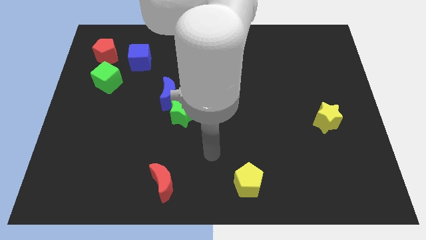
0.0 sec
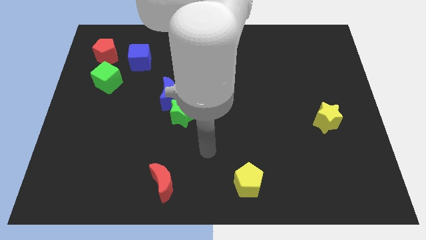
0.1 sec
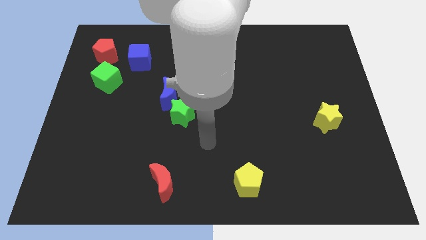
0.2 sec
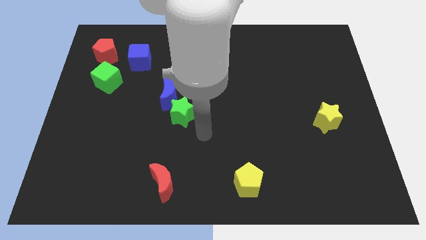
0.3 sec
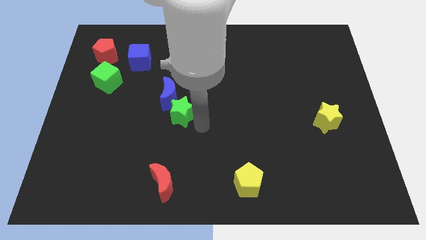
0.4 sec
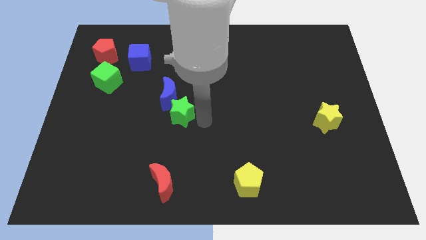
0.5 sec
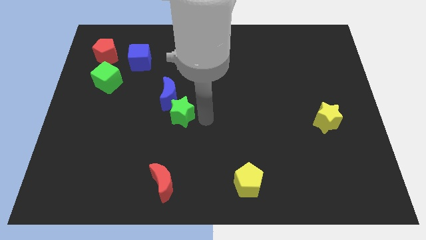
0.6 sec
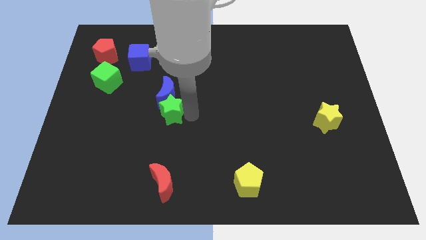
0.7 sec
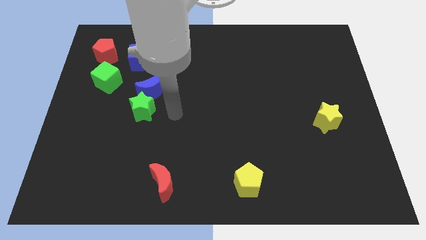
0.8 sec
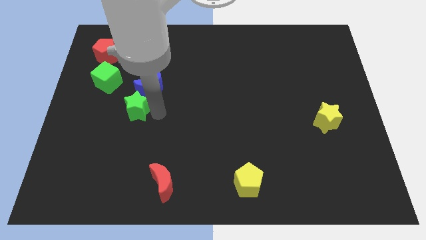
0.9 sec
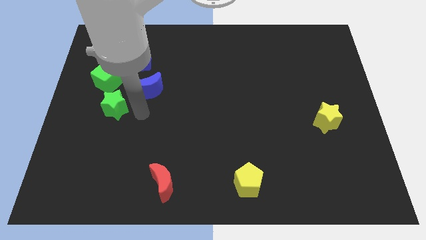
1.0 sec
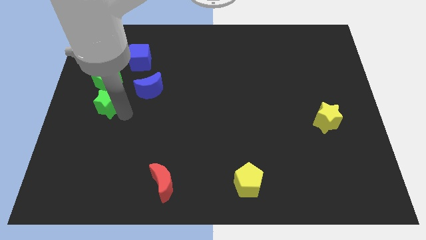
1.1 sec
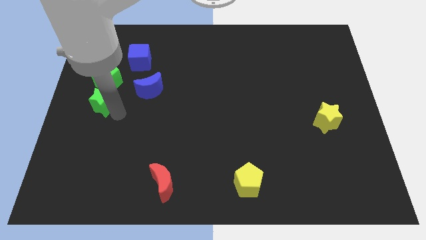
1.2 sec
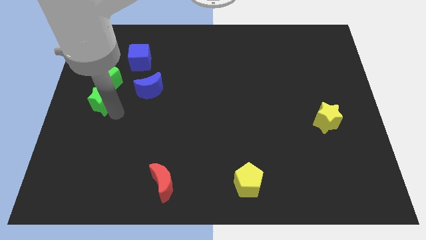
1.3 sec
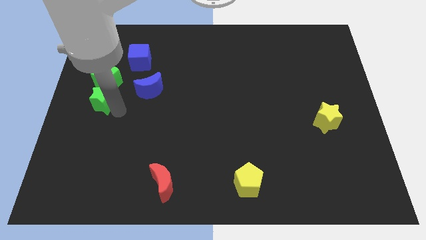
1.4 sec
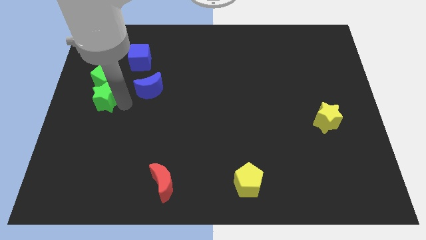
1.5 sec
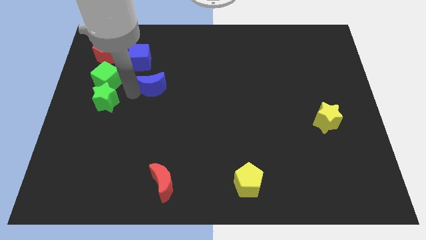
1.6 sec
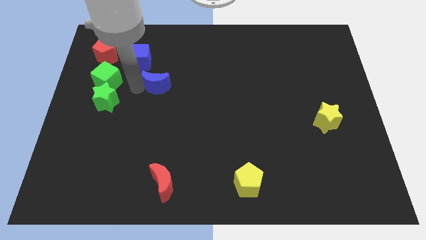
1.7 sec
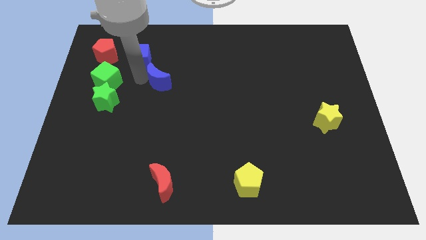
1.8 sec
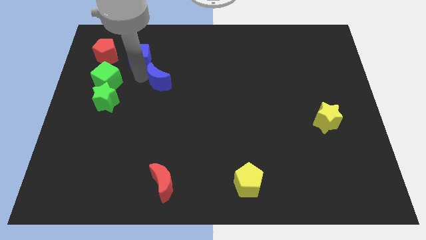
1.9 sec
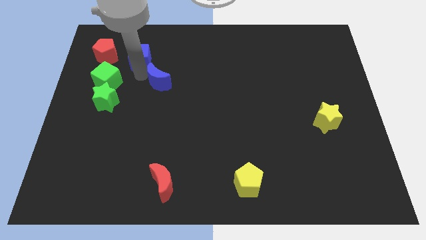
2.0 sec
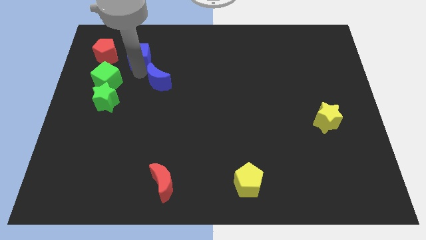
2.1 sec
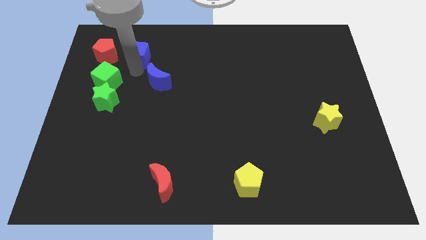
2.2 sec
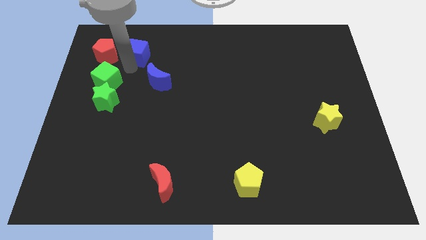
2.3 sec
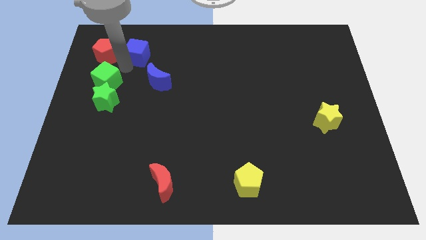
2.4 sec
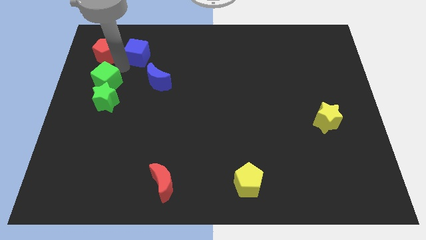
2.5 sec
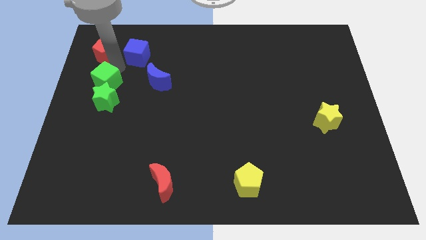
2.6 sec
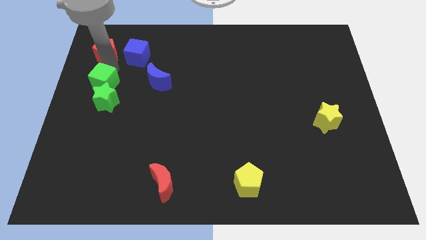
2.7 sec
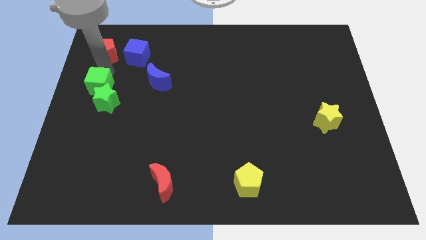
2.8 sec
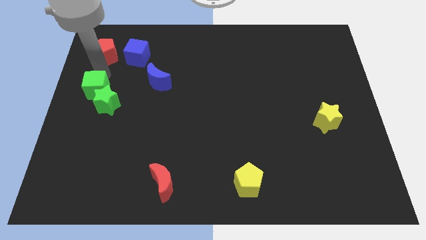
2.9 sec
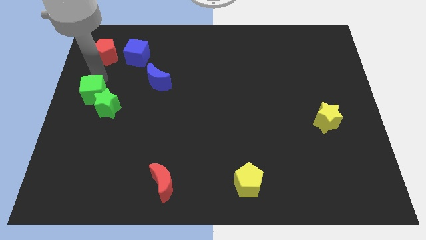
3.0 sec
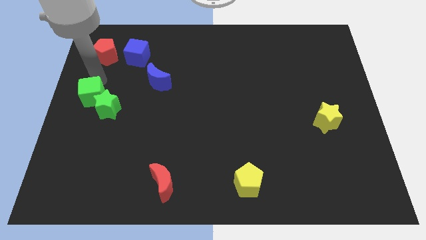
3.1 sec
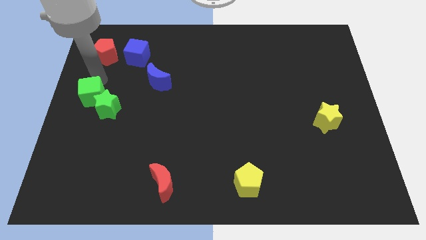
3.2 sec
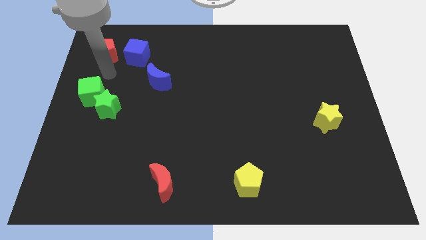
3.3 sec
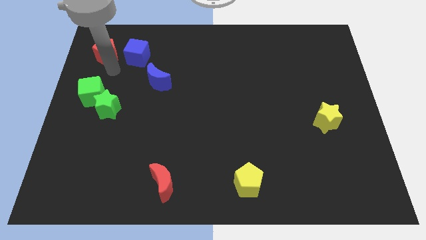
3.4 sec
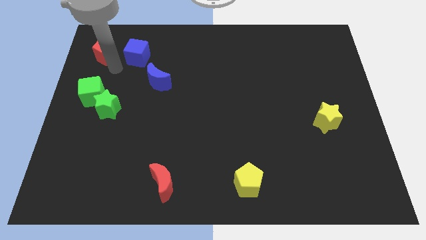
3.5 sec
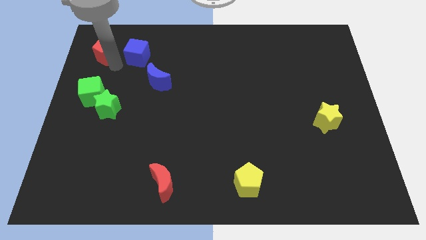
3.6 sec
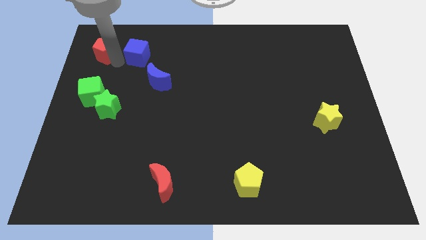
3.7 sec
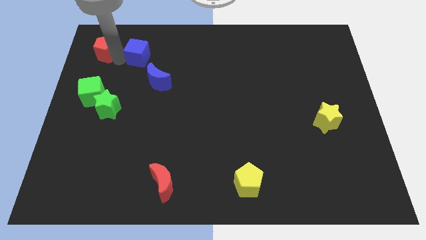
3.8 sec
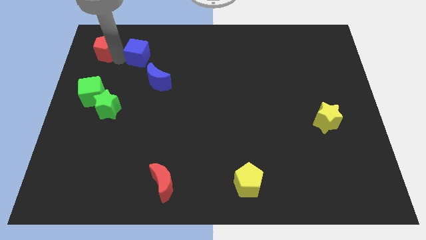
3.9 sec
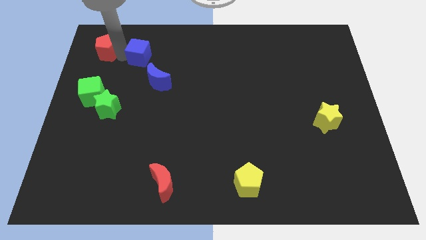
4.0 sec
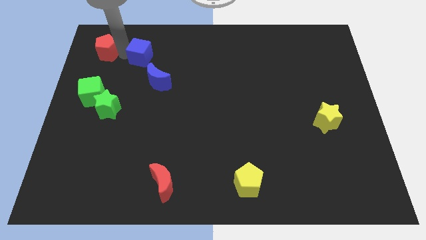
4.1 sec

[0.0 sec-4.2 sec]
push your hand between the blue cube and red pentagon

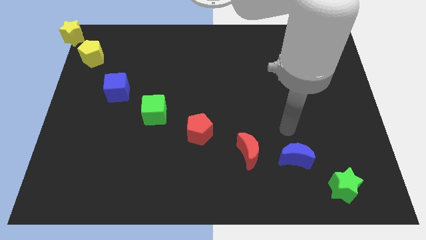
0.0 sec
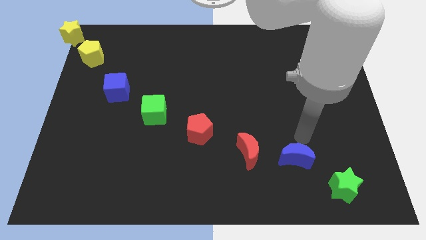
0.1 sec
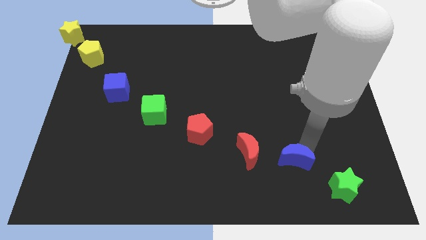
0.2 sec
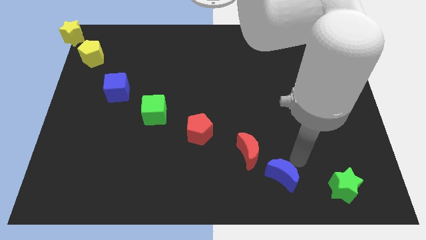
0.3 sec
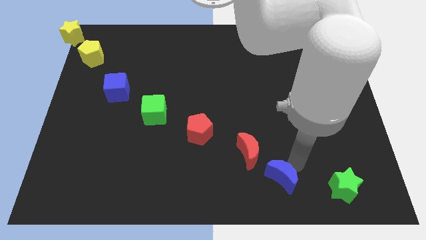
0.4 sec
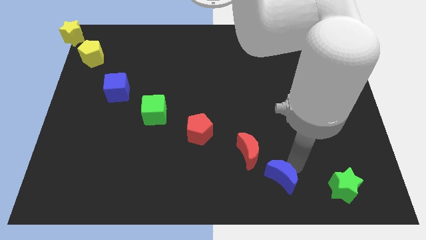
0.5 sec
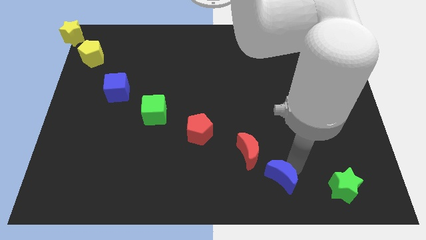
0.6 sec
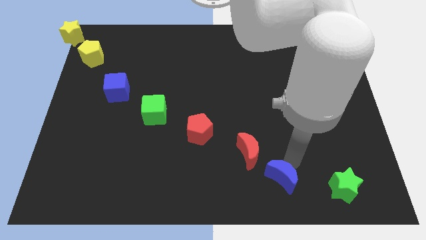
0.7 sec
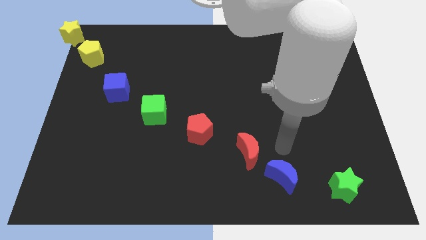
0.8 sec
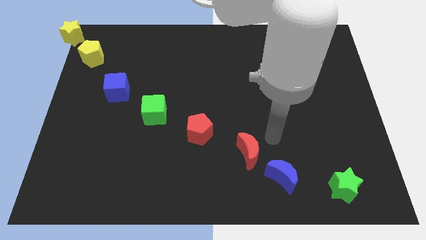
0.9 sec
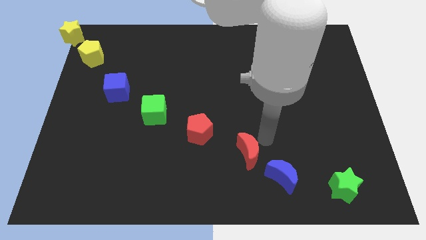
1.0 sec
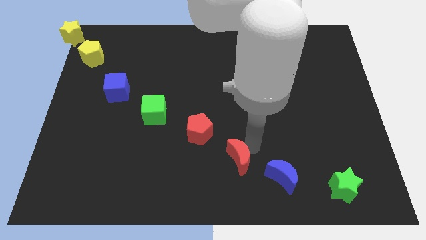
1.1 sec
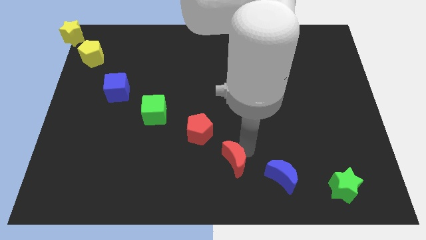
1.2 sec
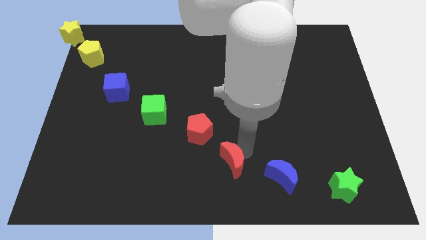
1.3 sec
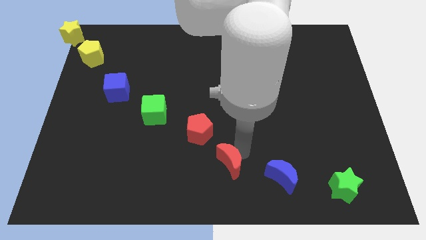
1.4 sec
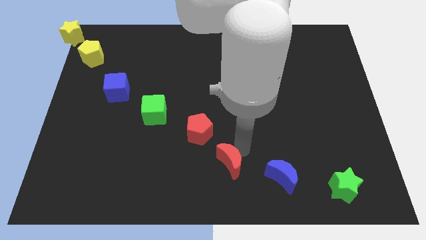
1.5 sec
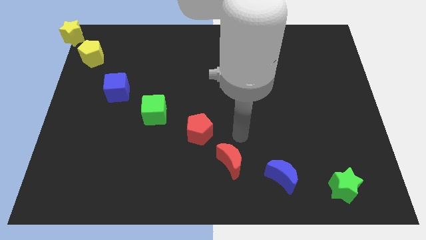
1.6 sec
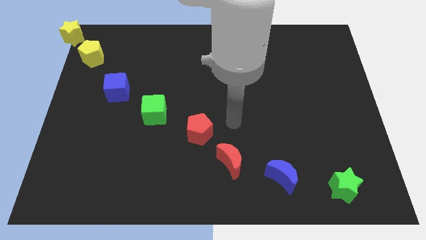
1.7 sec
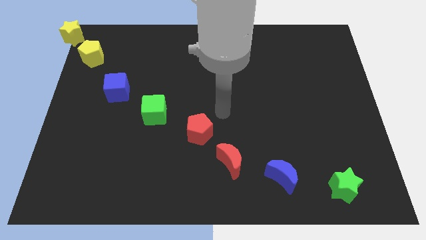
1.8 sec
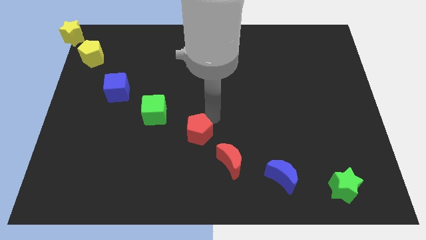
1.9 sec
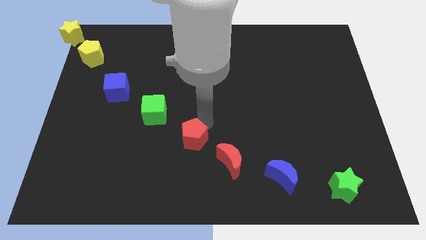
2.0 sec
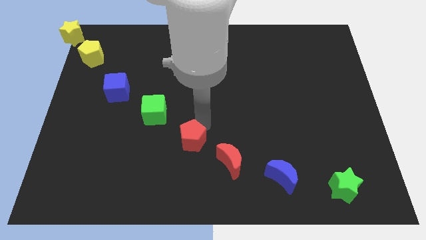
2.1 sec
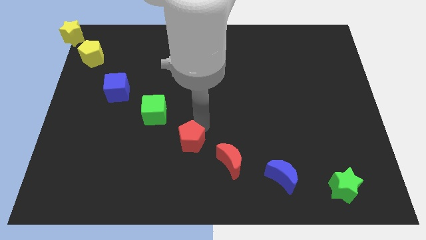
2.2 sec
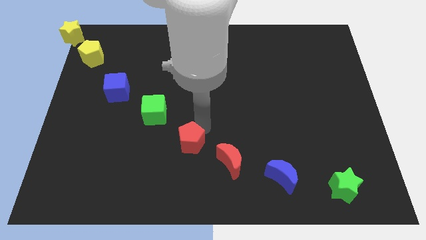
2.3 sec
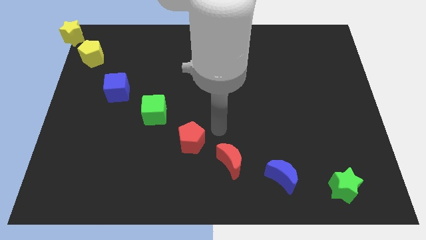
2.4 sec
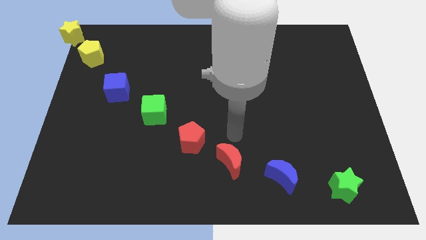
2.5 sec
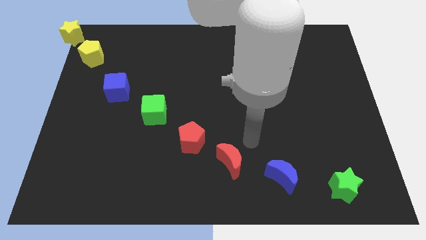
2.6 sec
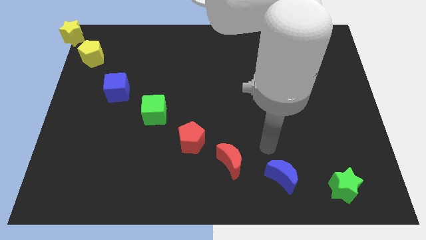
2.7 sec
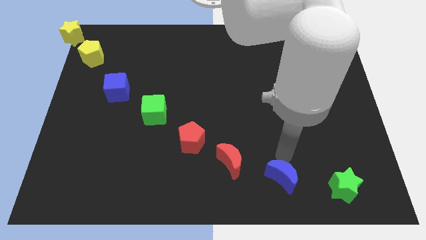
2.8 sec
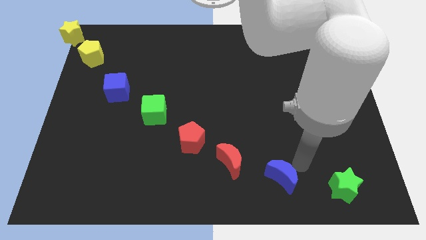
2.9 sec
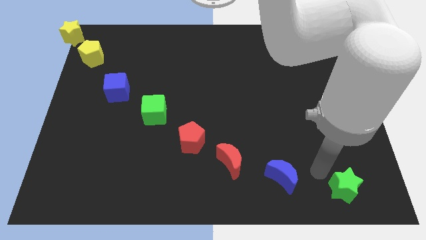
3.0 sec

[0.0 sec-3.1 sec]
tap the blue and red crescent and the red pentagon slightly towards down

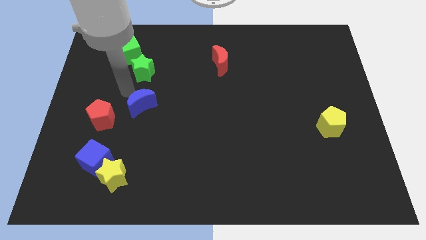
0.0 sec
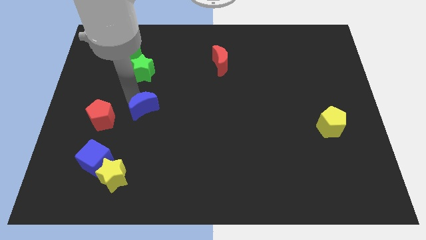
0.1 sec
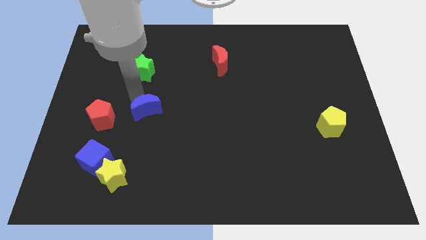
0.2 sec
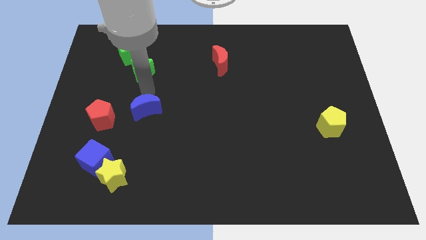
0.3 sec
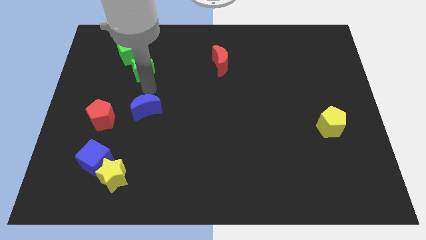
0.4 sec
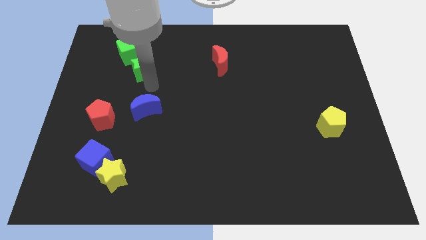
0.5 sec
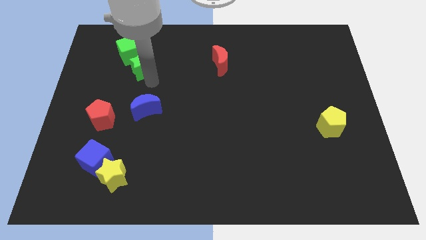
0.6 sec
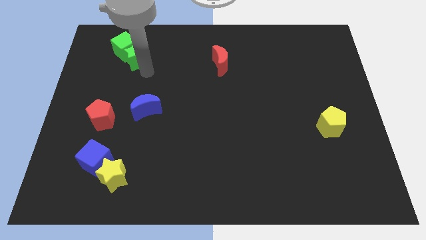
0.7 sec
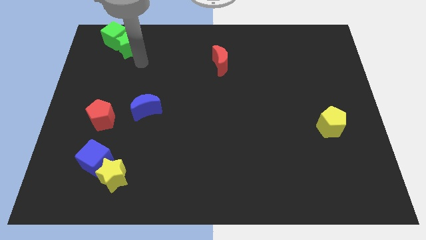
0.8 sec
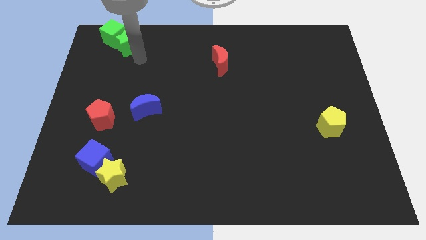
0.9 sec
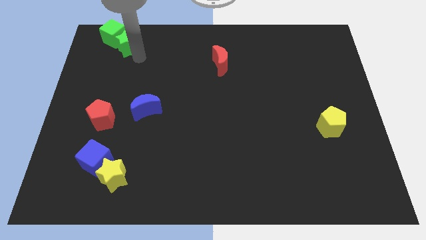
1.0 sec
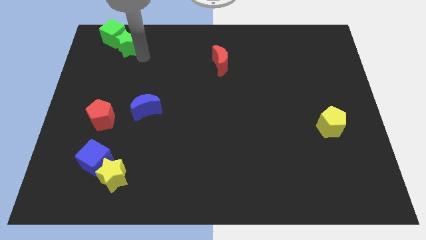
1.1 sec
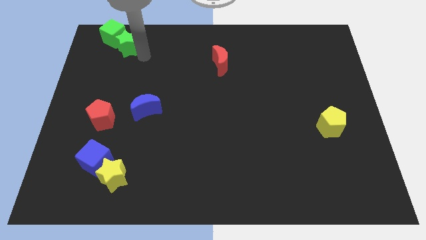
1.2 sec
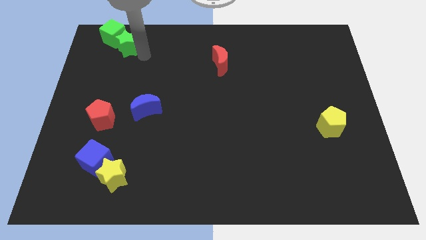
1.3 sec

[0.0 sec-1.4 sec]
push the blue moon and the green blocks away from each other

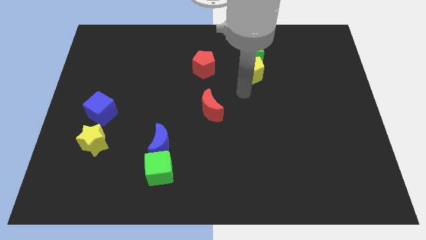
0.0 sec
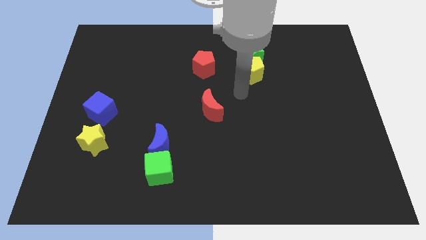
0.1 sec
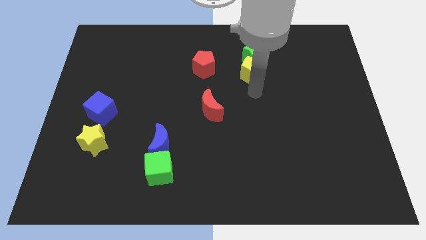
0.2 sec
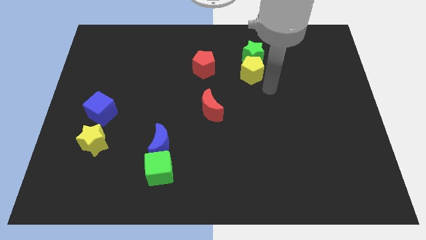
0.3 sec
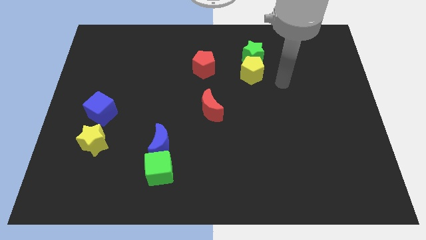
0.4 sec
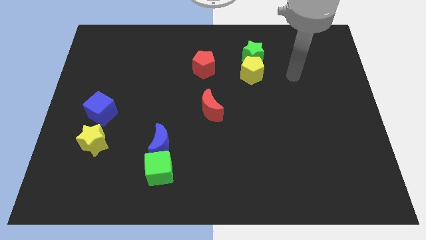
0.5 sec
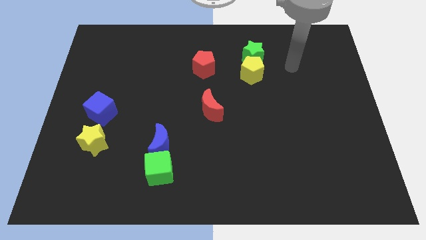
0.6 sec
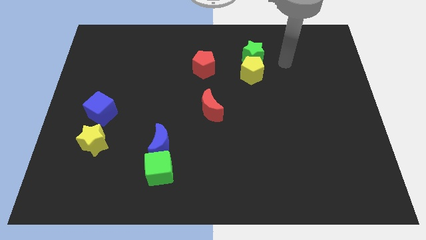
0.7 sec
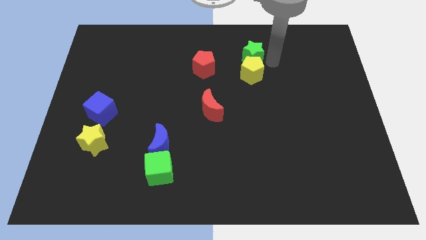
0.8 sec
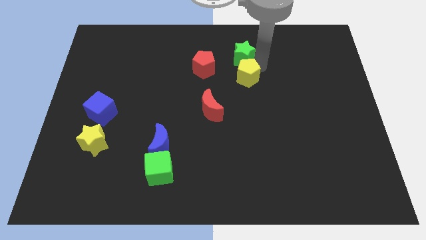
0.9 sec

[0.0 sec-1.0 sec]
place the arm to the top right side of the yellow pentagon
